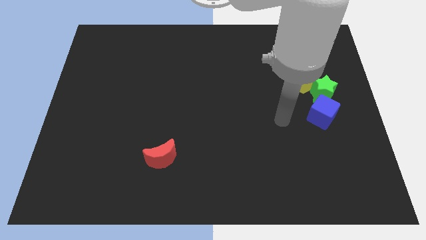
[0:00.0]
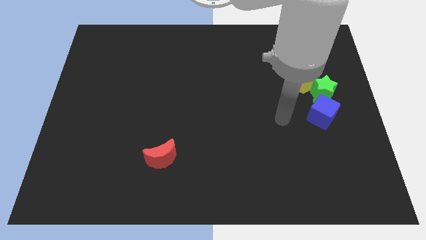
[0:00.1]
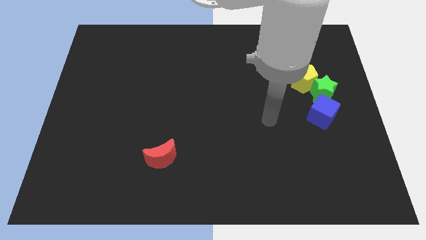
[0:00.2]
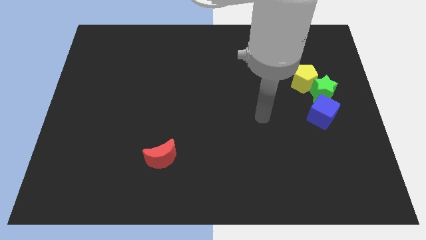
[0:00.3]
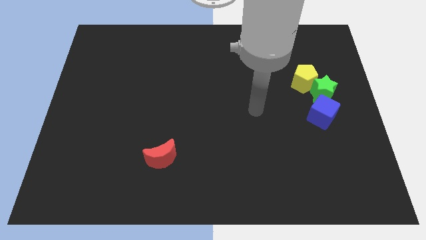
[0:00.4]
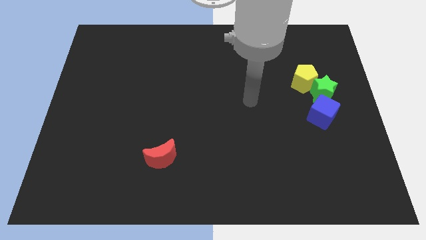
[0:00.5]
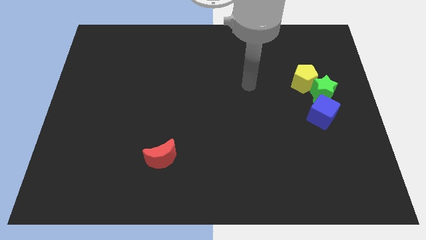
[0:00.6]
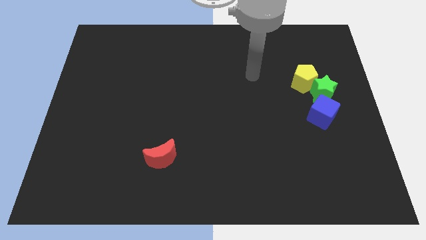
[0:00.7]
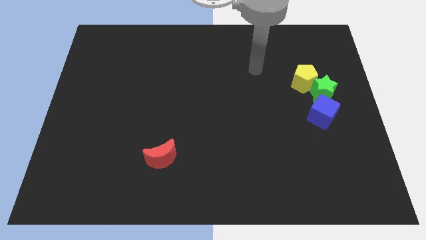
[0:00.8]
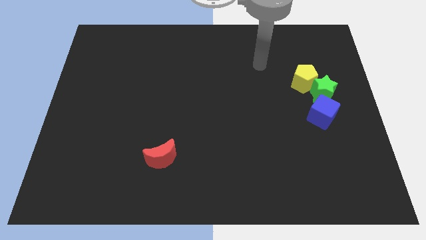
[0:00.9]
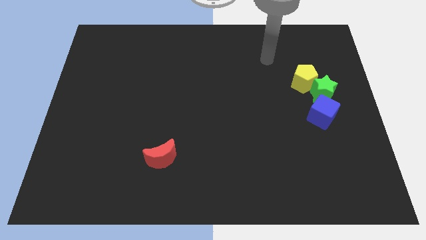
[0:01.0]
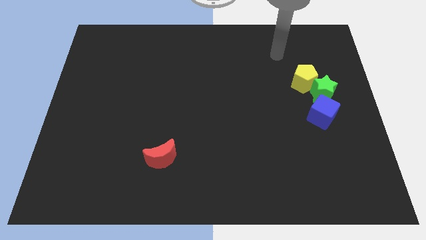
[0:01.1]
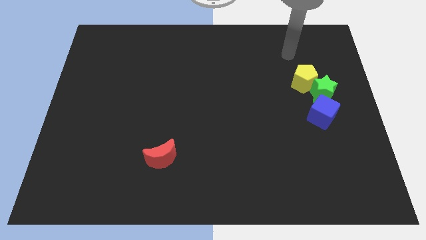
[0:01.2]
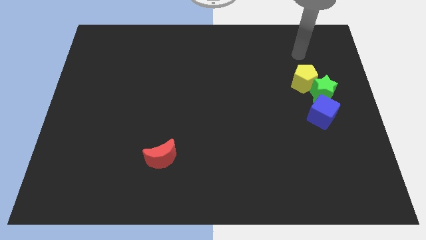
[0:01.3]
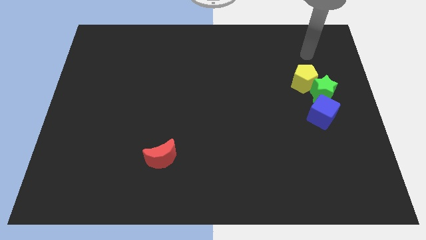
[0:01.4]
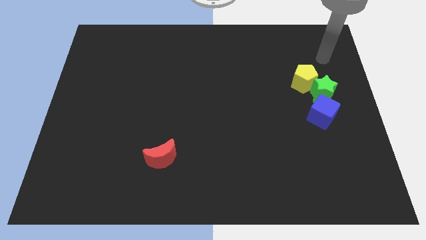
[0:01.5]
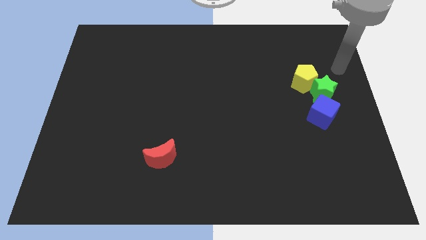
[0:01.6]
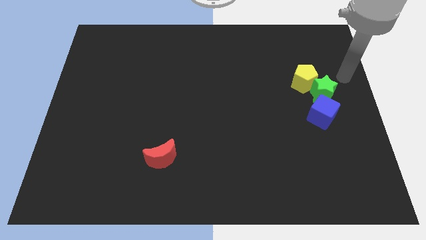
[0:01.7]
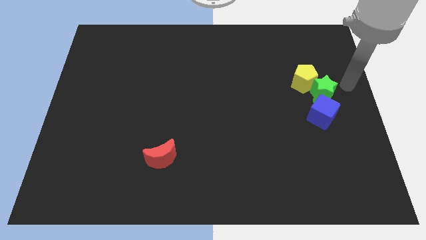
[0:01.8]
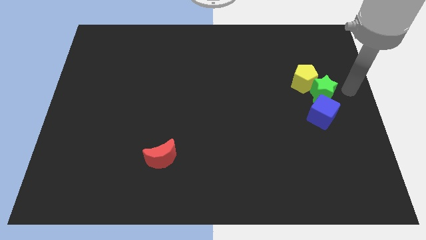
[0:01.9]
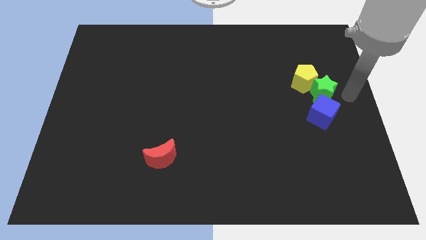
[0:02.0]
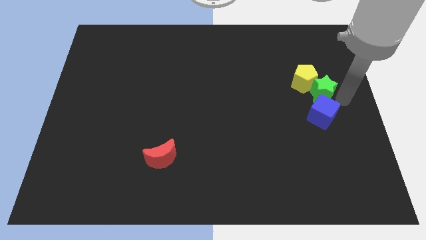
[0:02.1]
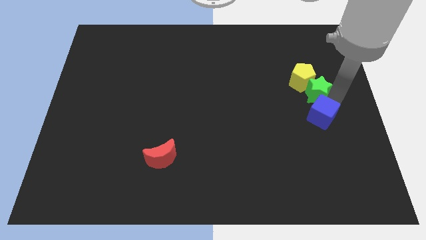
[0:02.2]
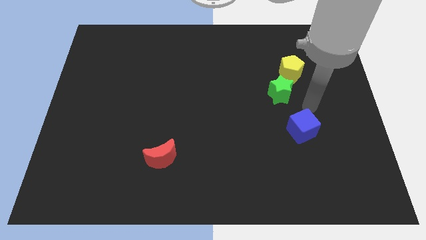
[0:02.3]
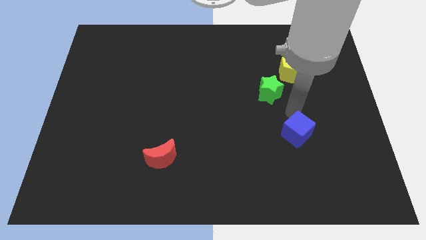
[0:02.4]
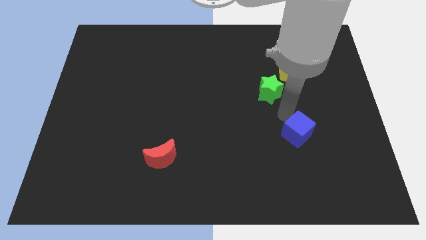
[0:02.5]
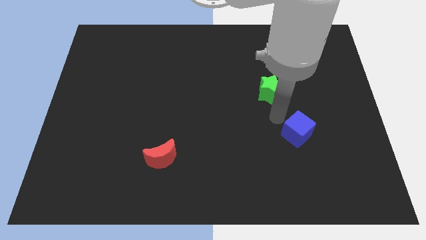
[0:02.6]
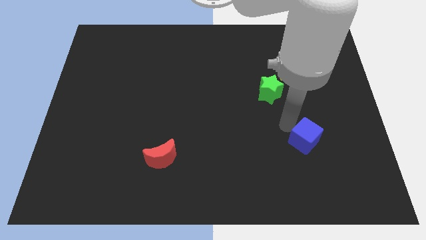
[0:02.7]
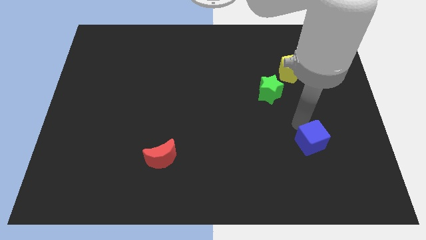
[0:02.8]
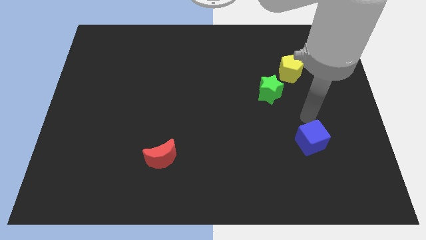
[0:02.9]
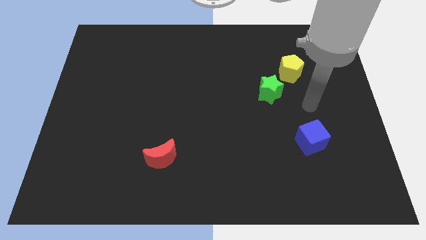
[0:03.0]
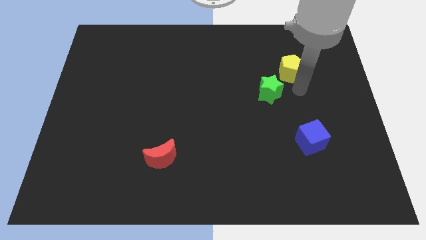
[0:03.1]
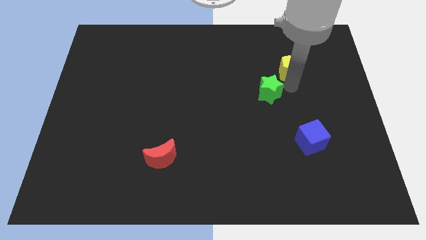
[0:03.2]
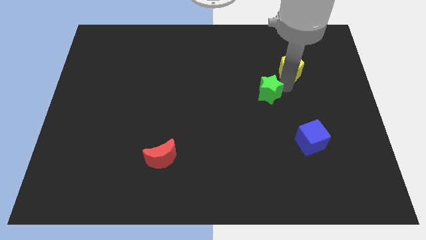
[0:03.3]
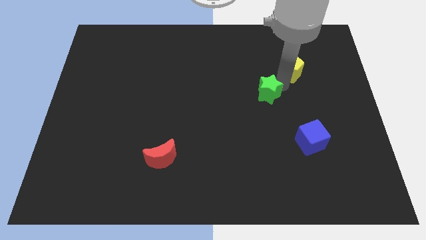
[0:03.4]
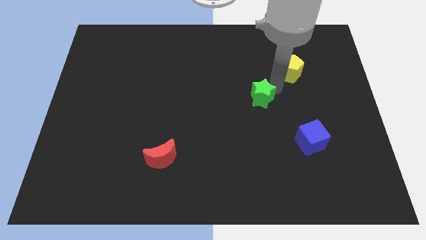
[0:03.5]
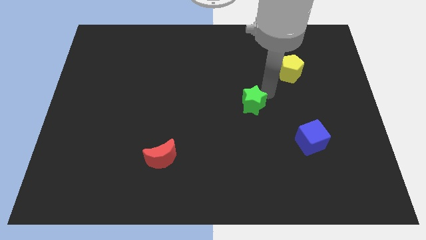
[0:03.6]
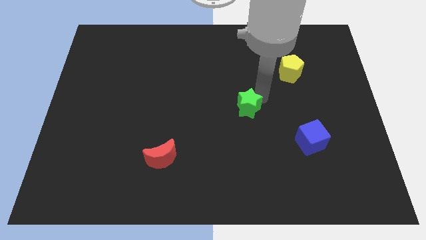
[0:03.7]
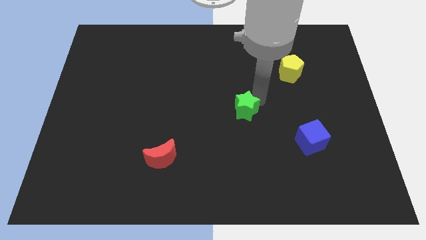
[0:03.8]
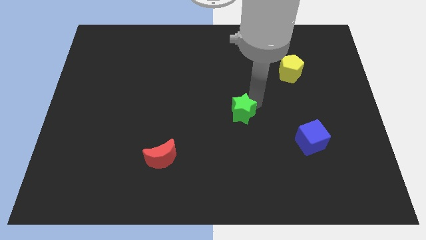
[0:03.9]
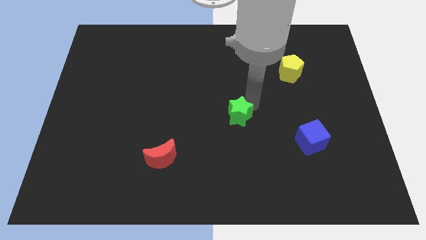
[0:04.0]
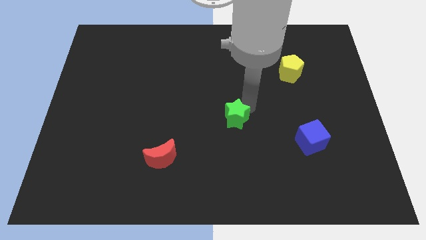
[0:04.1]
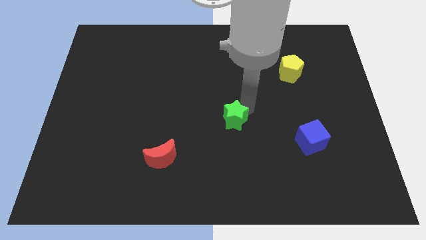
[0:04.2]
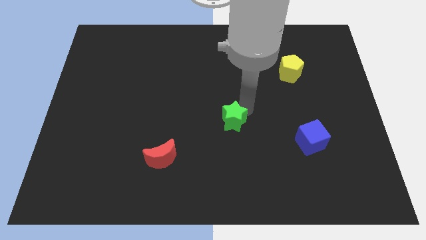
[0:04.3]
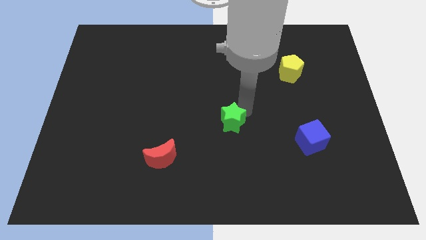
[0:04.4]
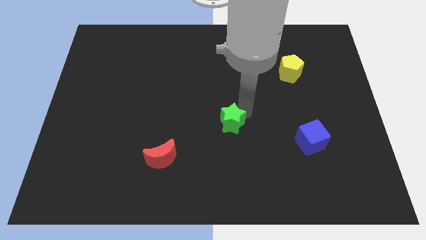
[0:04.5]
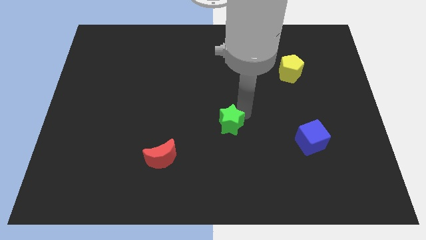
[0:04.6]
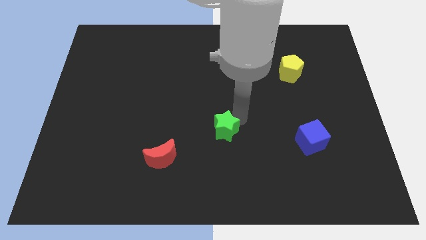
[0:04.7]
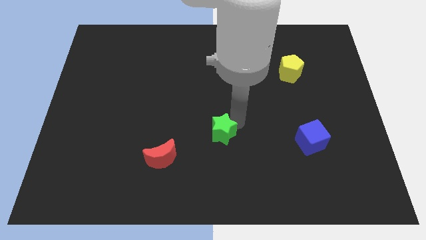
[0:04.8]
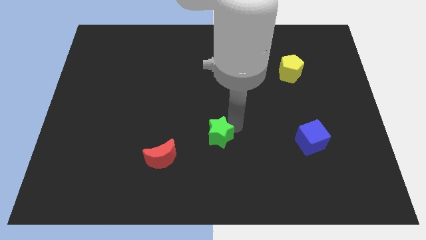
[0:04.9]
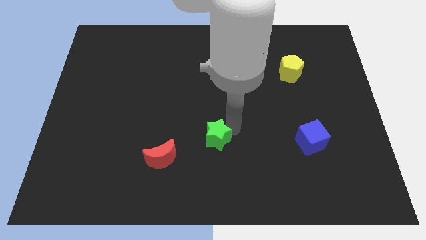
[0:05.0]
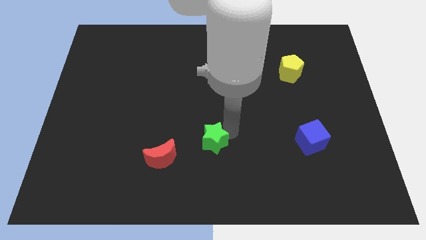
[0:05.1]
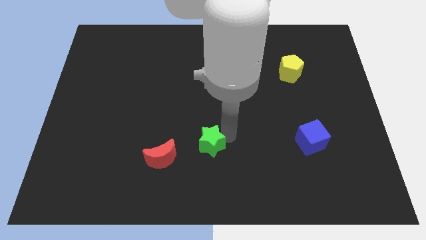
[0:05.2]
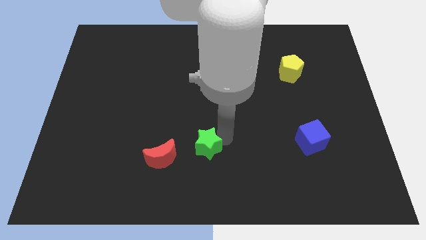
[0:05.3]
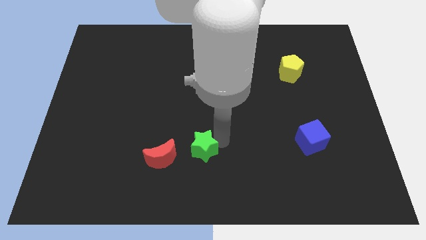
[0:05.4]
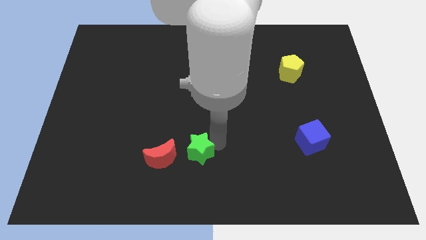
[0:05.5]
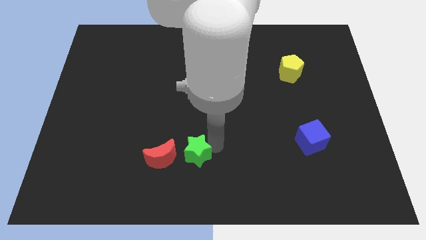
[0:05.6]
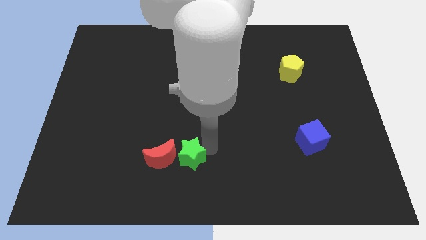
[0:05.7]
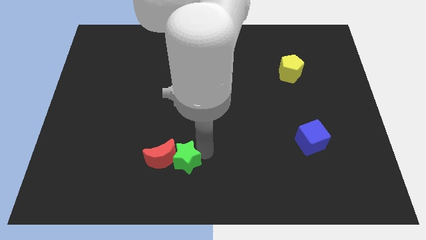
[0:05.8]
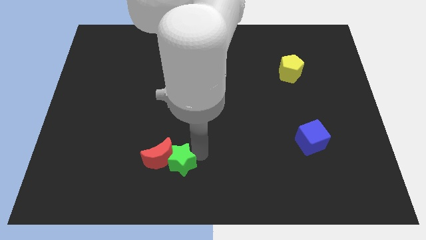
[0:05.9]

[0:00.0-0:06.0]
move the green star towards the red moon

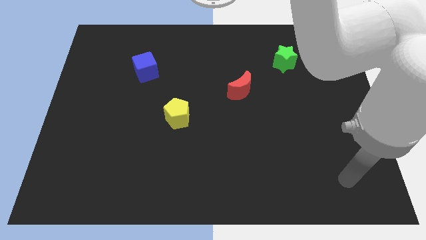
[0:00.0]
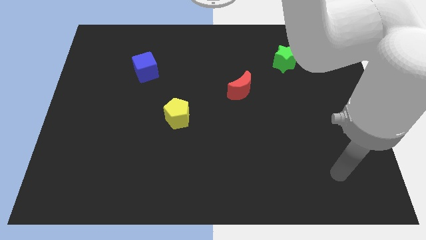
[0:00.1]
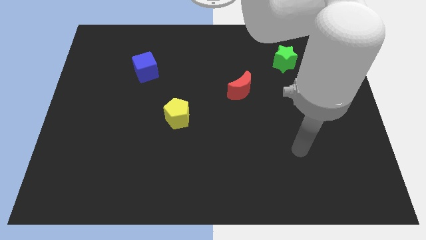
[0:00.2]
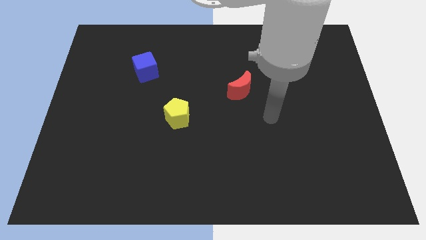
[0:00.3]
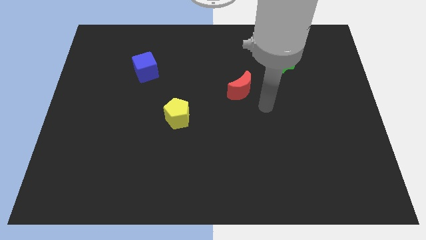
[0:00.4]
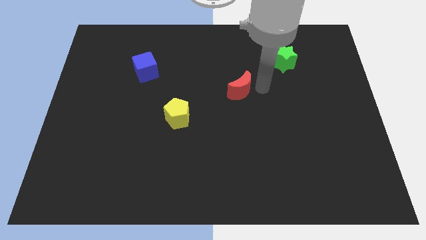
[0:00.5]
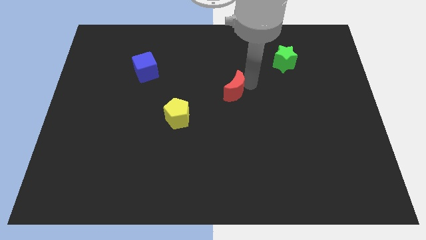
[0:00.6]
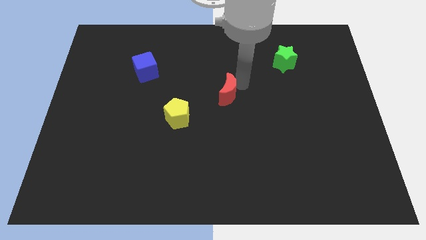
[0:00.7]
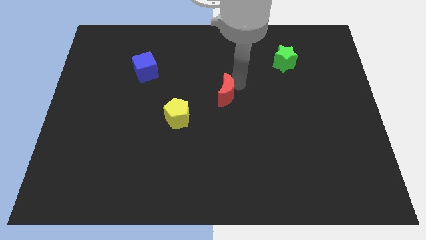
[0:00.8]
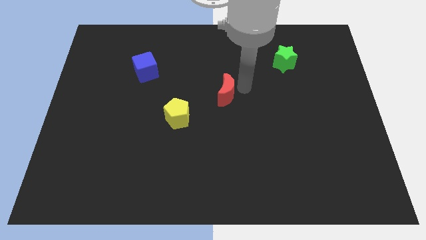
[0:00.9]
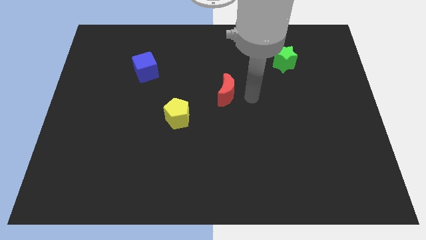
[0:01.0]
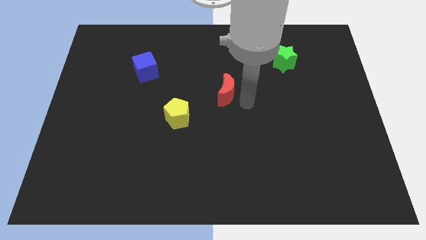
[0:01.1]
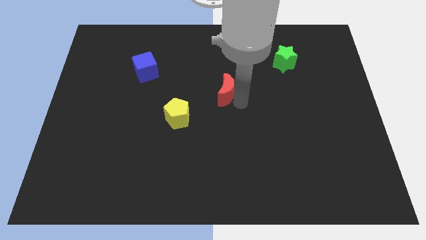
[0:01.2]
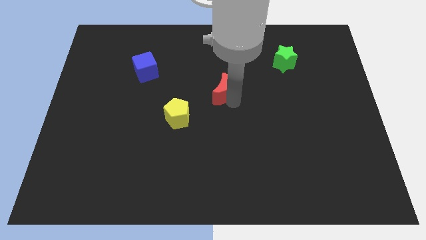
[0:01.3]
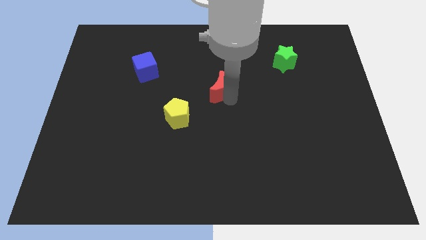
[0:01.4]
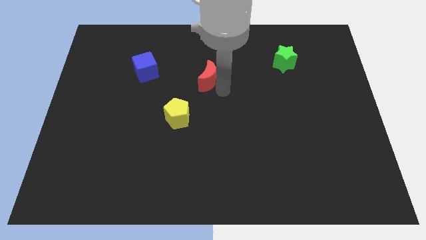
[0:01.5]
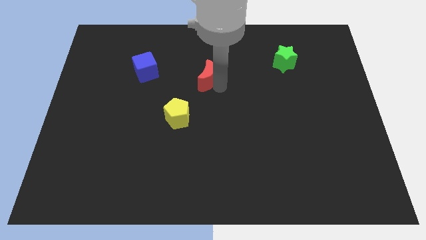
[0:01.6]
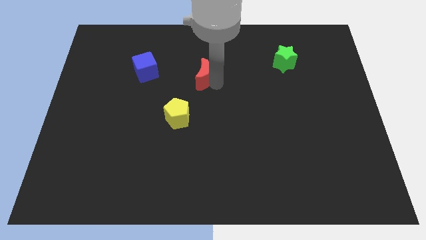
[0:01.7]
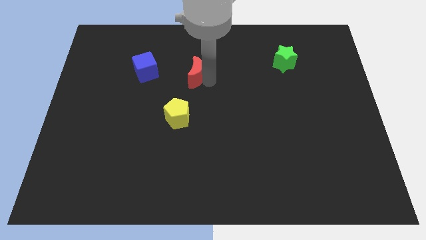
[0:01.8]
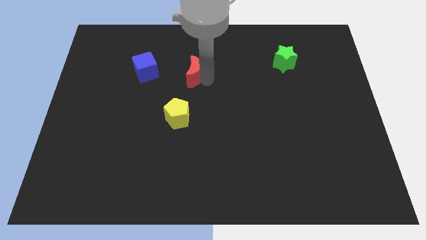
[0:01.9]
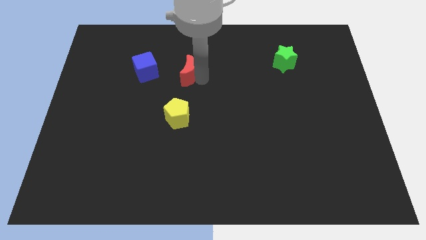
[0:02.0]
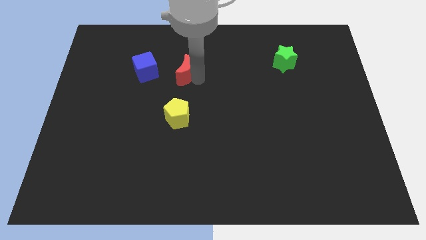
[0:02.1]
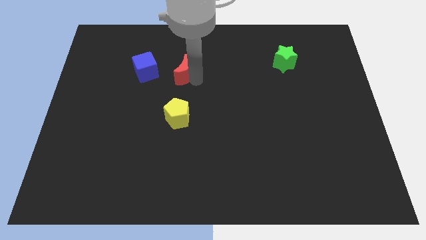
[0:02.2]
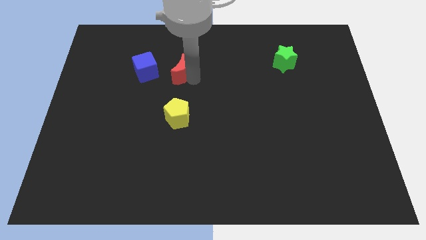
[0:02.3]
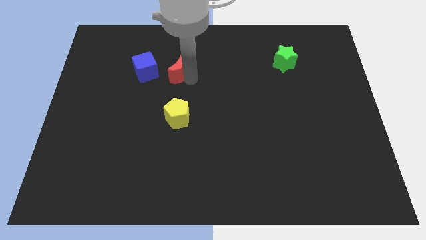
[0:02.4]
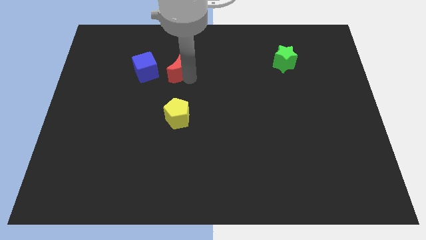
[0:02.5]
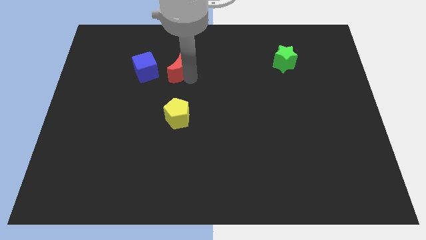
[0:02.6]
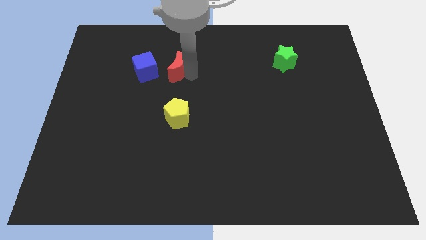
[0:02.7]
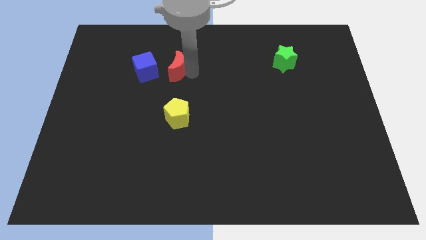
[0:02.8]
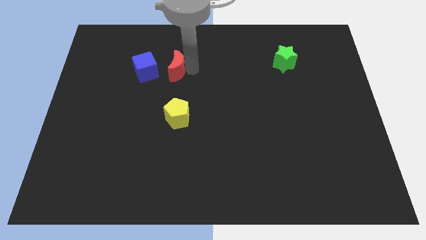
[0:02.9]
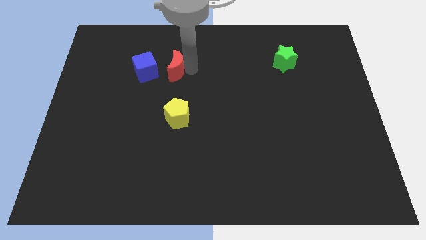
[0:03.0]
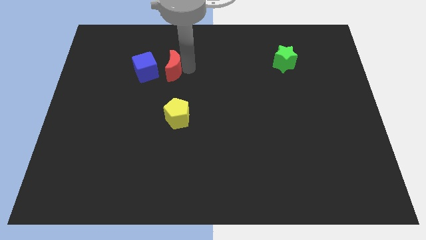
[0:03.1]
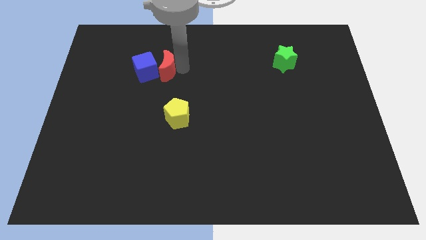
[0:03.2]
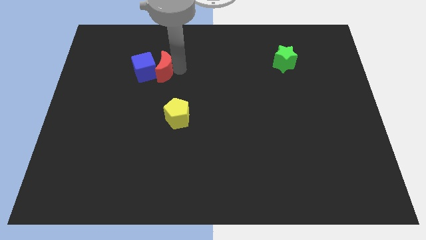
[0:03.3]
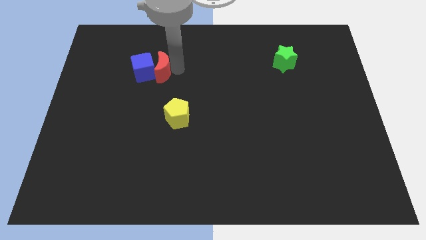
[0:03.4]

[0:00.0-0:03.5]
push the red block to the blue cube
